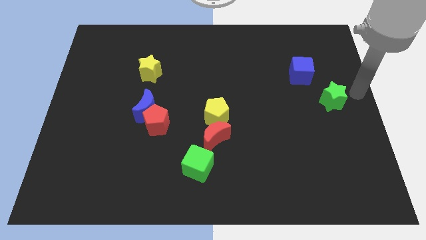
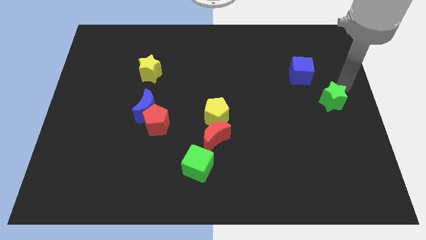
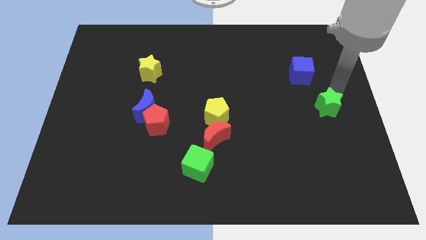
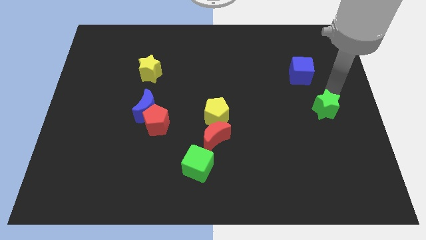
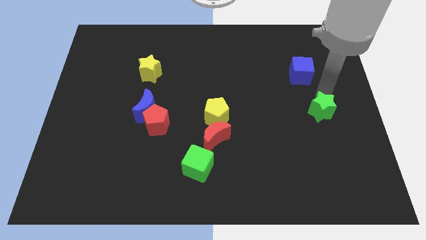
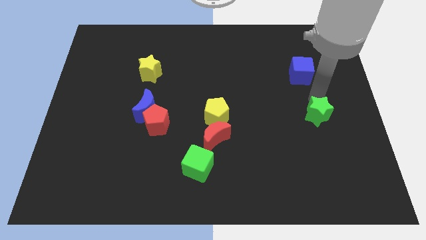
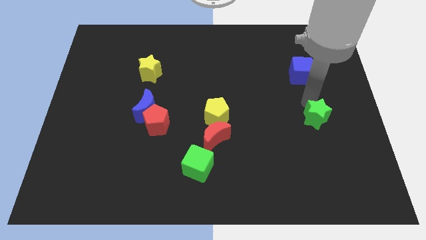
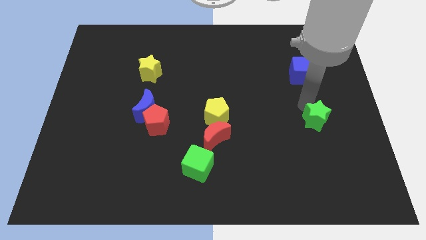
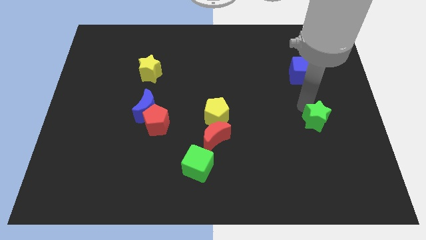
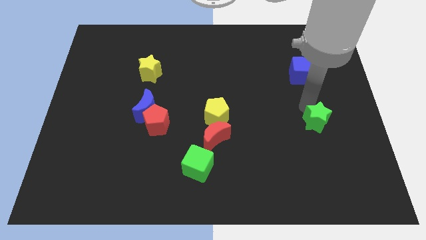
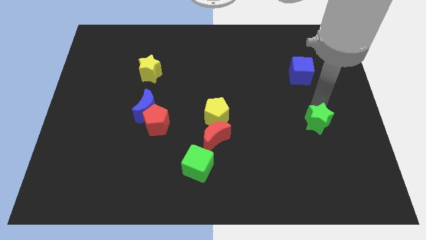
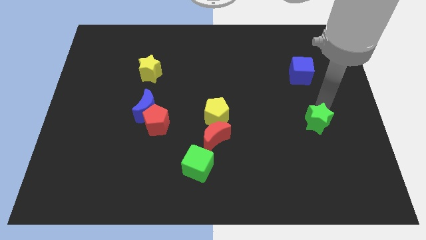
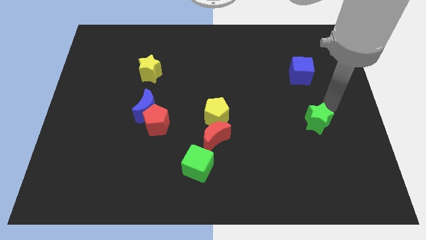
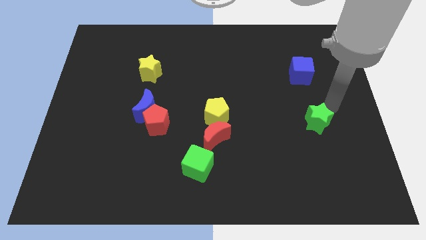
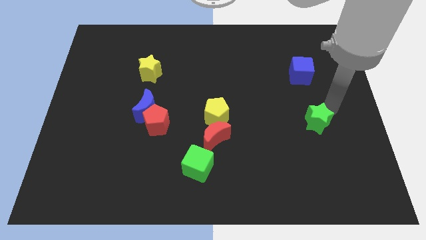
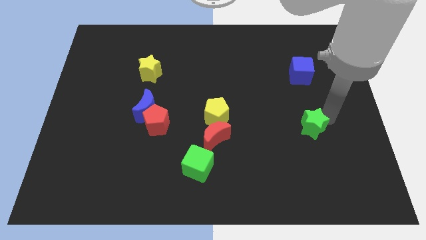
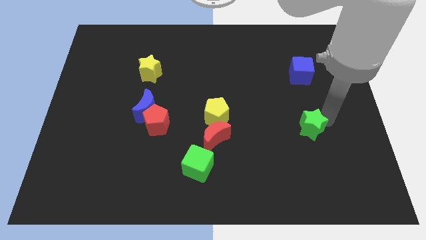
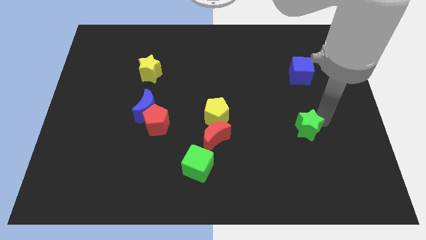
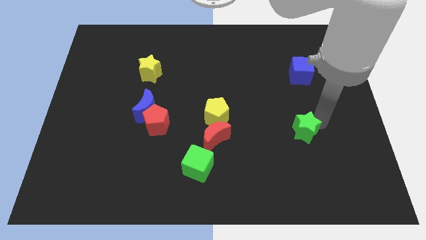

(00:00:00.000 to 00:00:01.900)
place the green star vertically below the blue cube

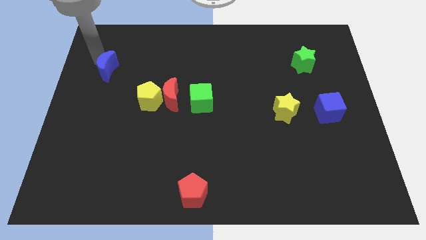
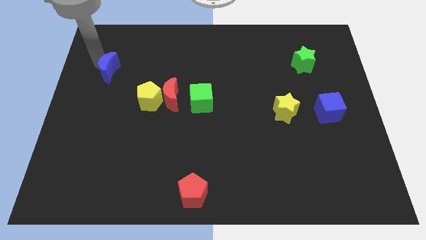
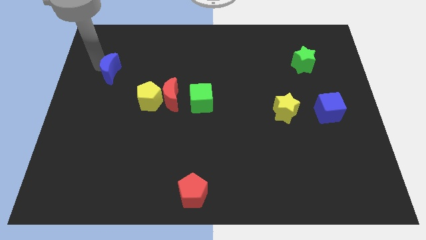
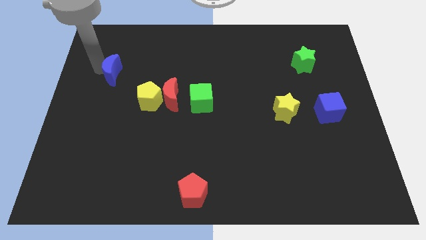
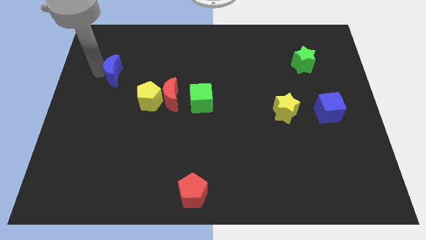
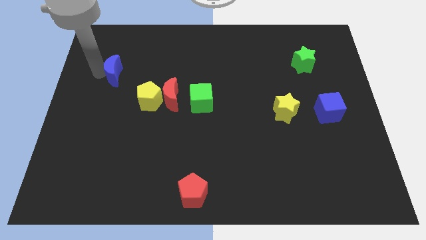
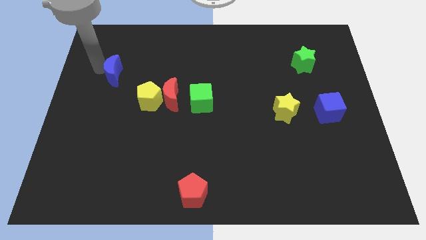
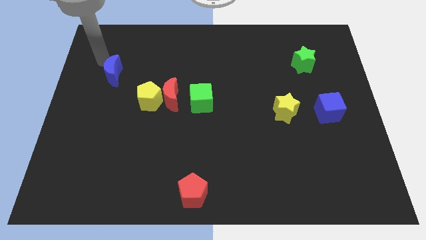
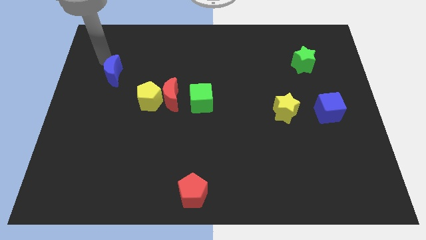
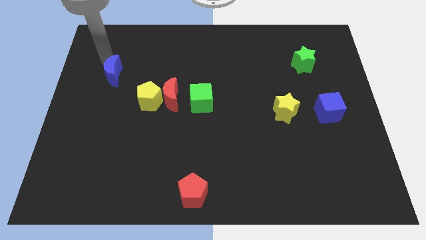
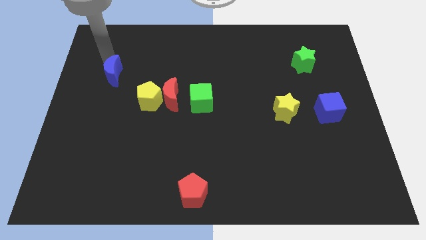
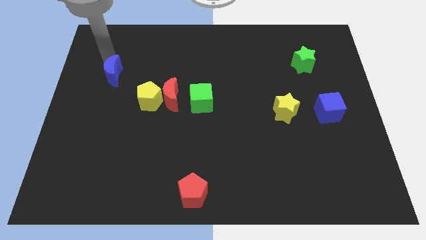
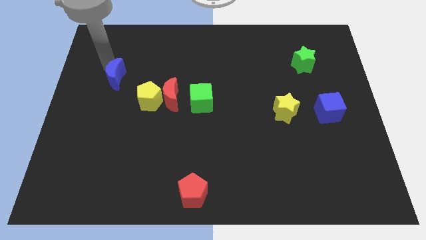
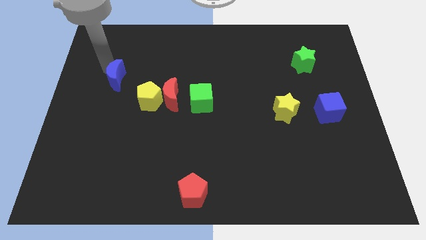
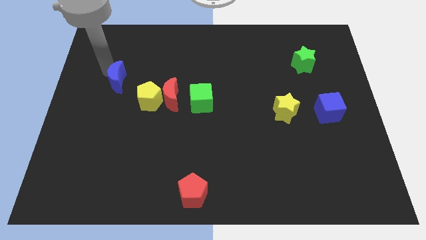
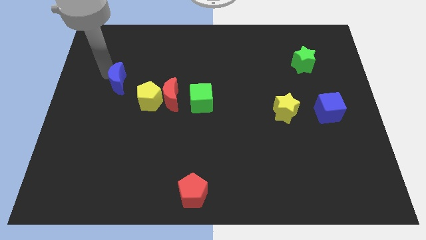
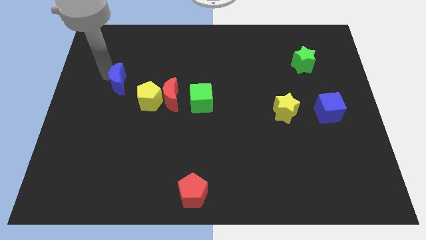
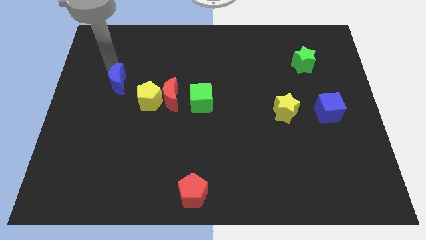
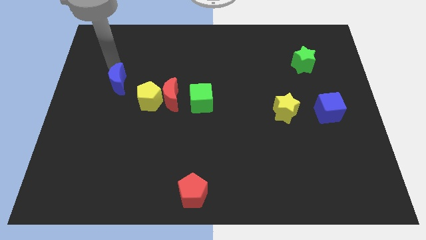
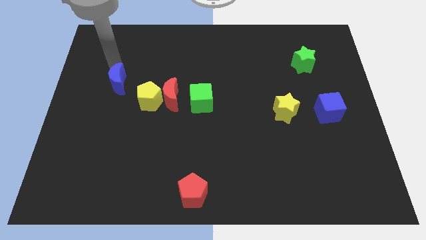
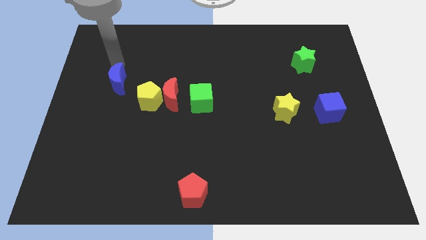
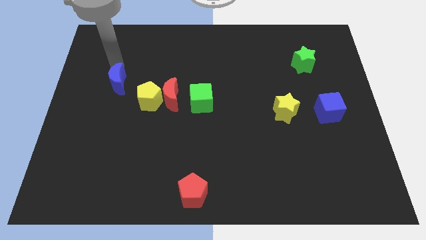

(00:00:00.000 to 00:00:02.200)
push the blue crescent slightly towards the yellow pentagon

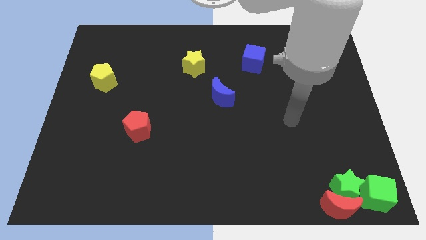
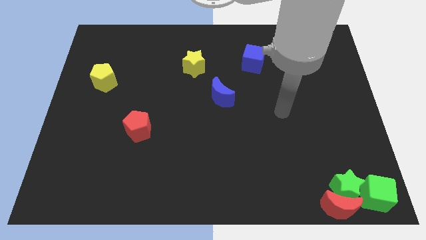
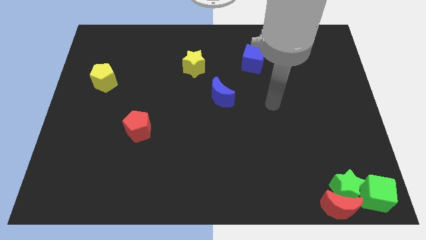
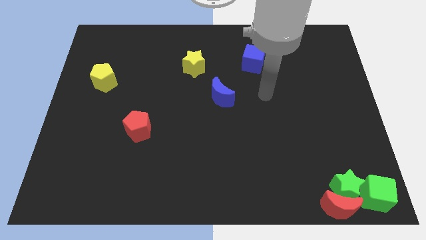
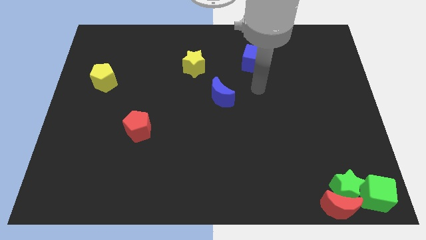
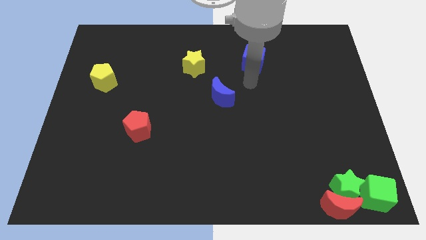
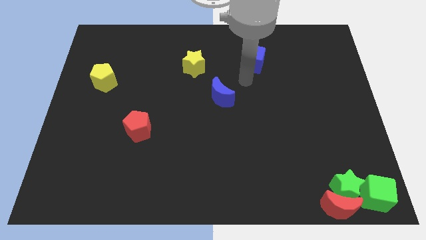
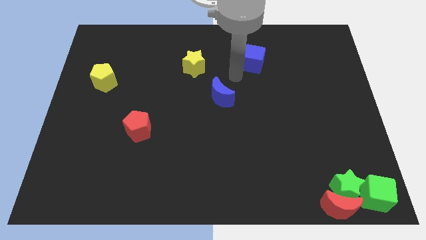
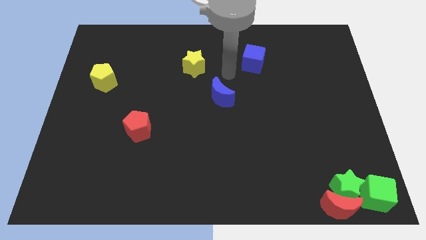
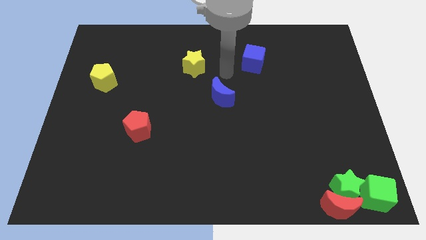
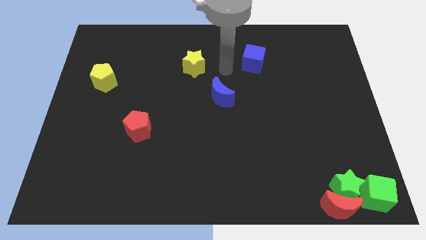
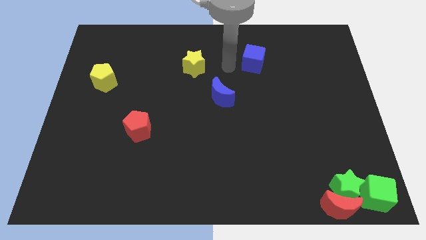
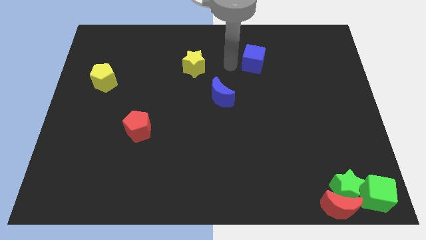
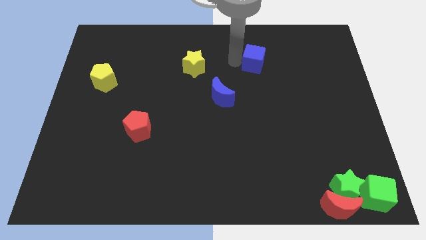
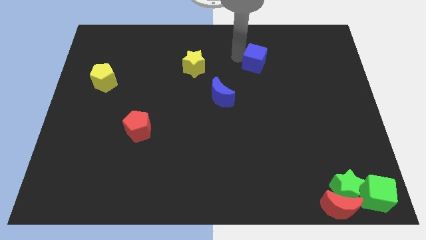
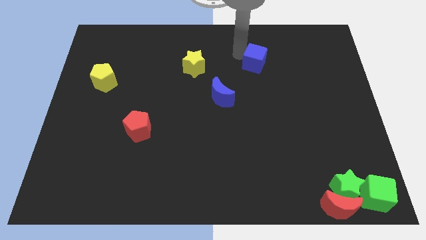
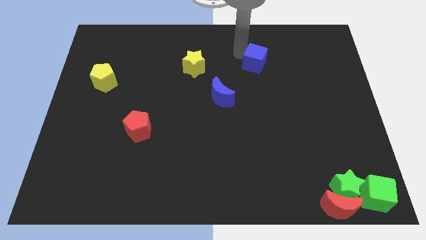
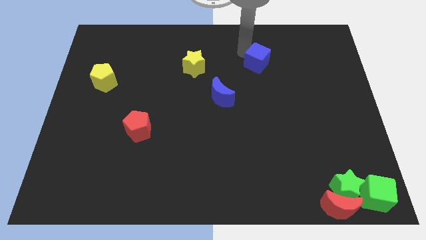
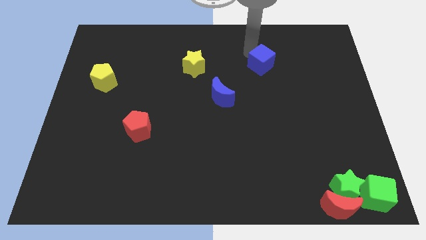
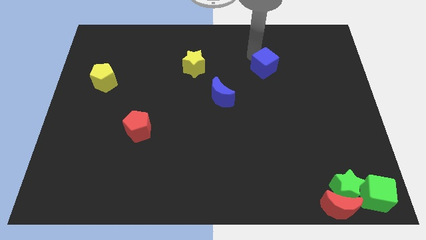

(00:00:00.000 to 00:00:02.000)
touch the left top of the blue cube

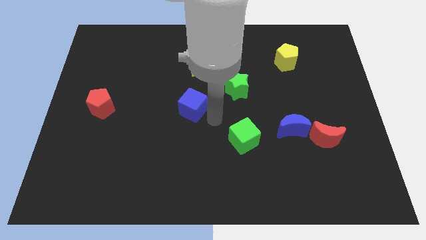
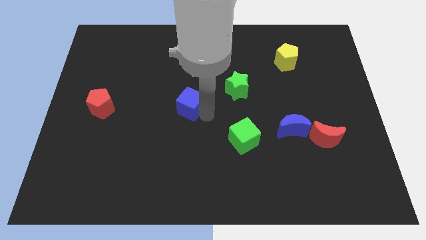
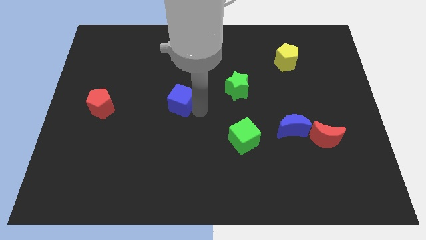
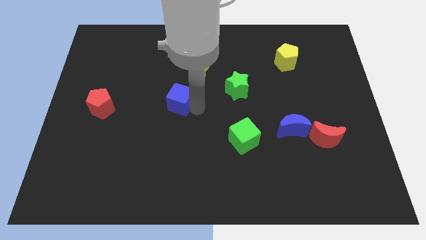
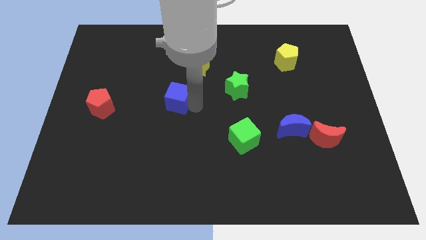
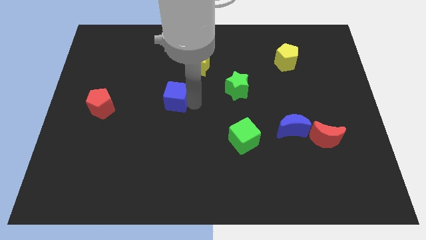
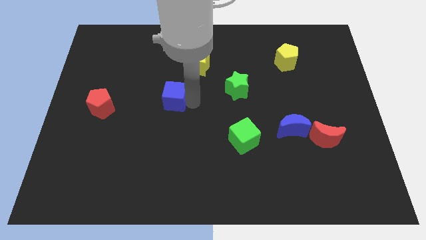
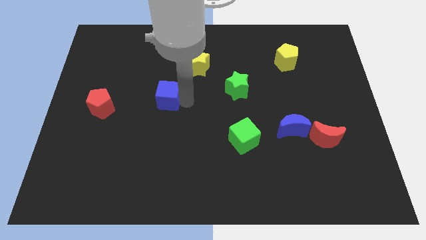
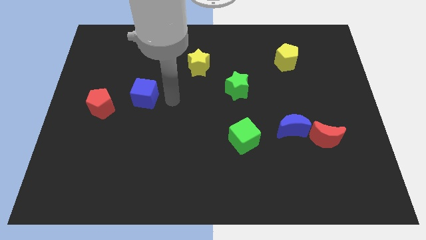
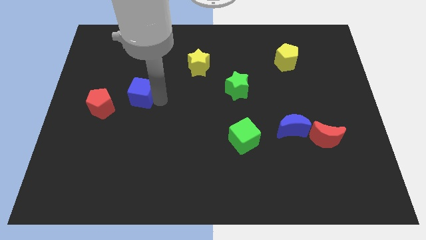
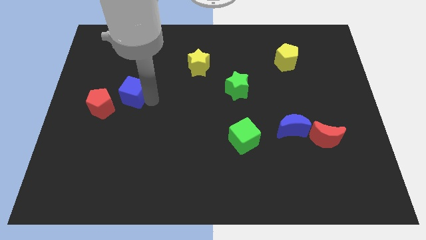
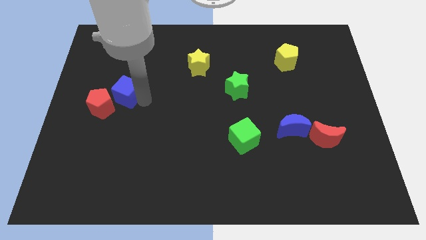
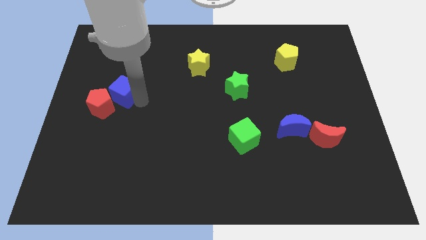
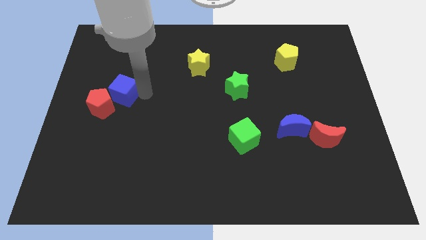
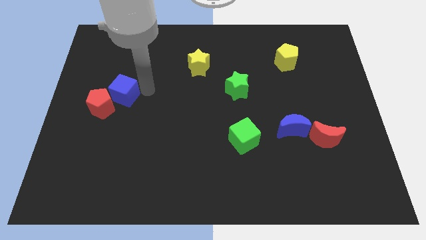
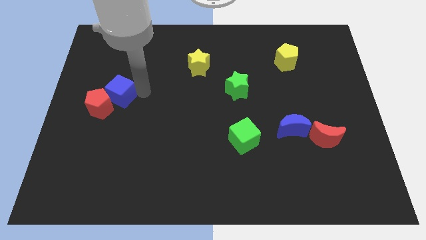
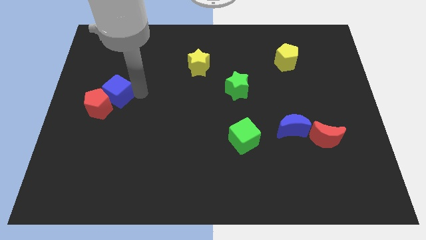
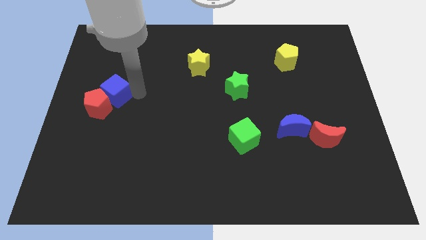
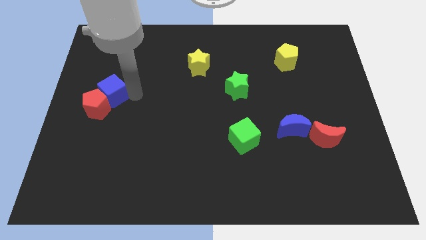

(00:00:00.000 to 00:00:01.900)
push the blue cube into the top right of the red pentagon

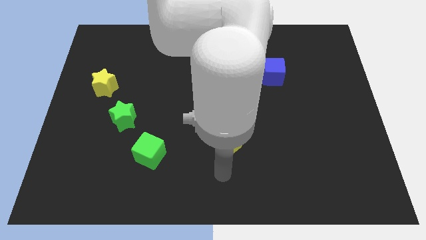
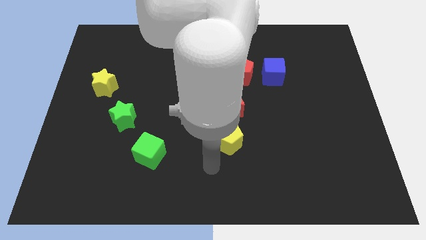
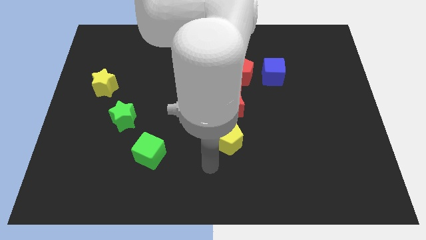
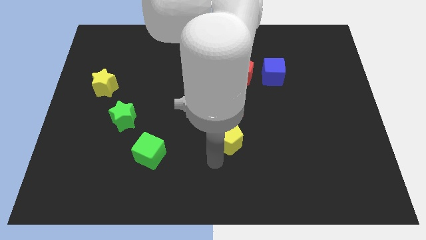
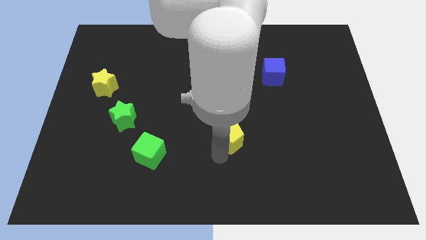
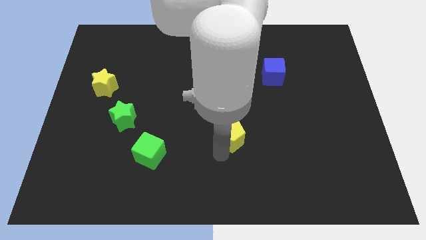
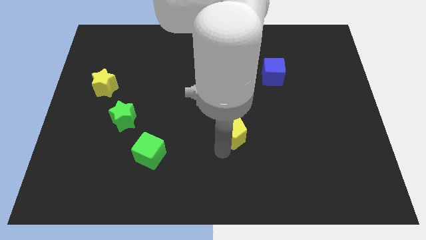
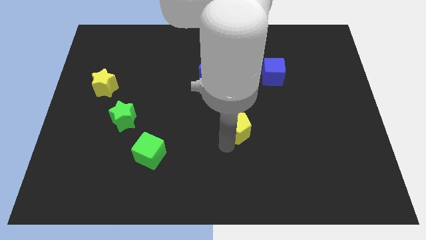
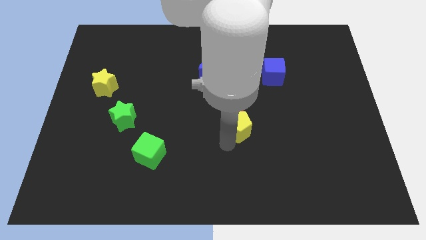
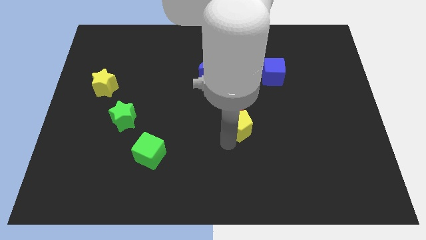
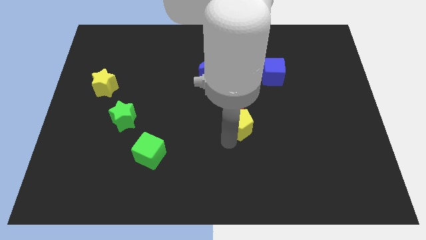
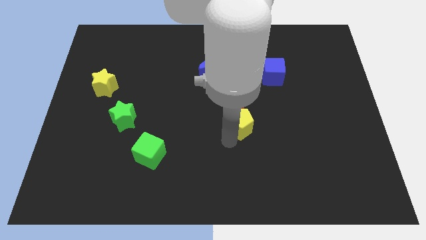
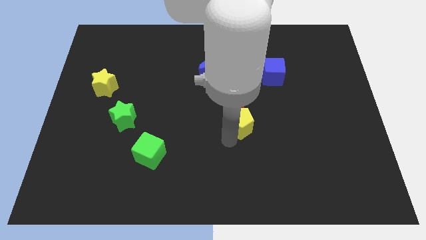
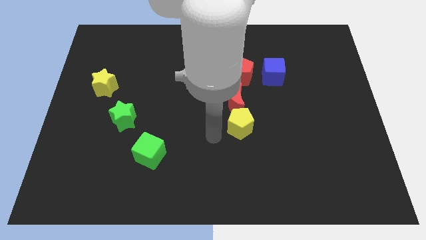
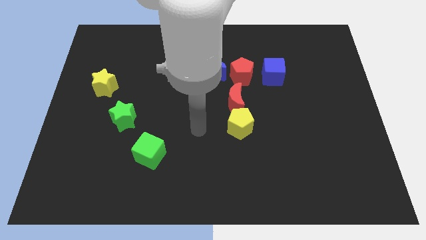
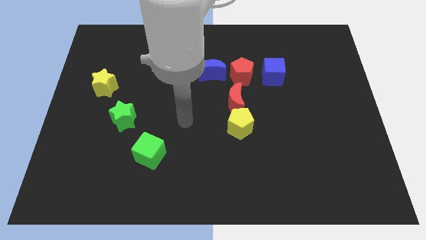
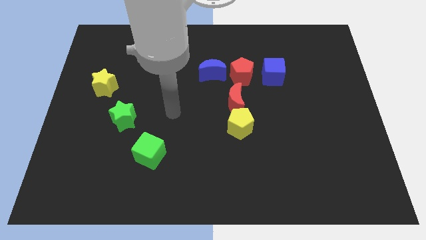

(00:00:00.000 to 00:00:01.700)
move the yellow pentagon to the bottom of the red crescent
